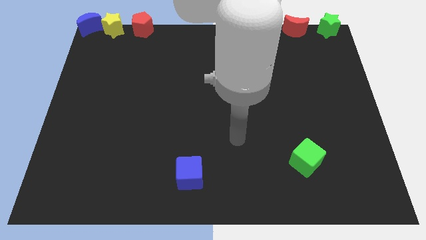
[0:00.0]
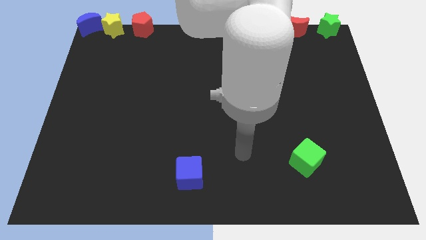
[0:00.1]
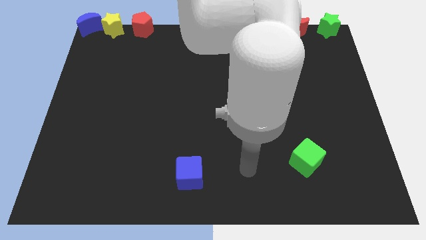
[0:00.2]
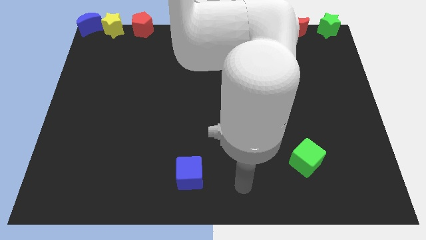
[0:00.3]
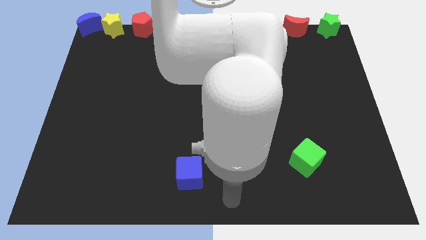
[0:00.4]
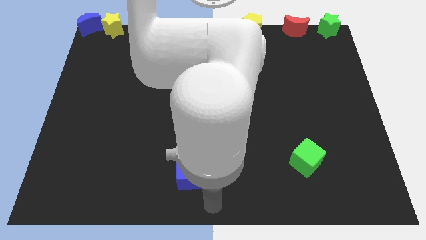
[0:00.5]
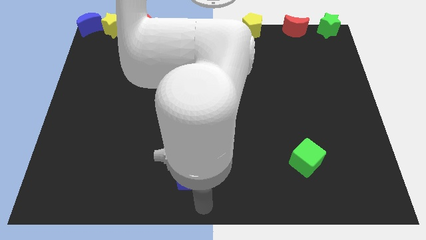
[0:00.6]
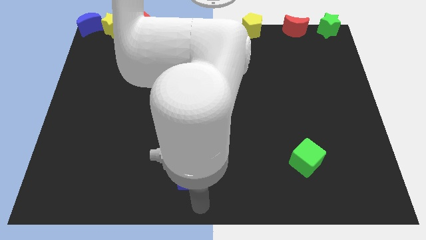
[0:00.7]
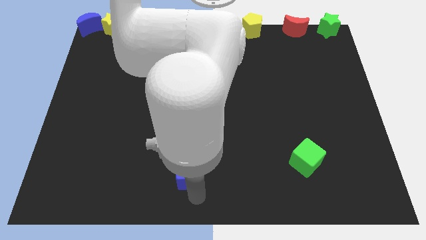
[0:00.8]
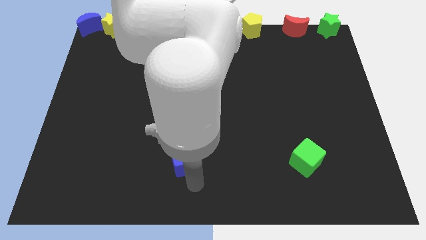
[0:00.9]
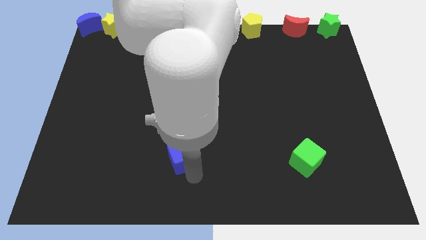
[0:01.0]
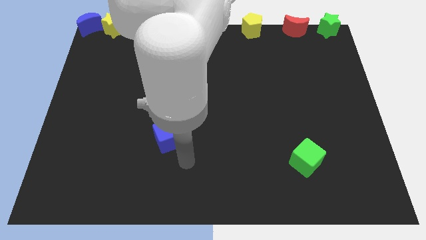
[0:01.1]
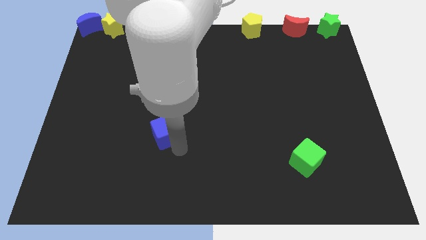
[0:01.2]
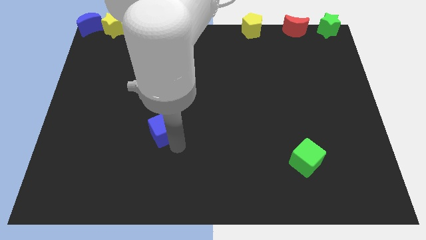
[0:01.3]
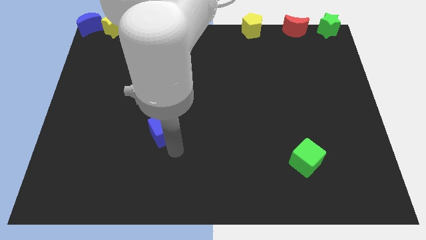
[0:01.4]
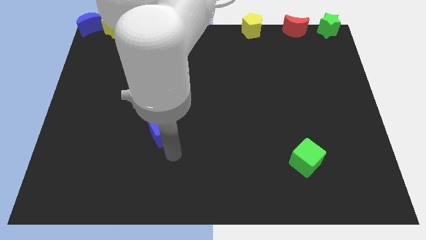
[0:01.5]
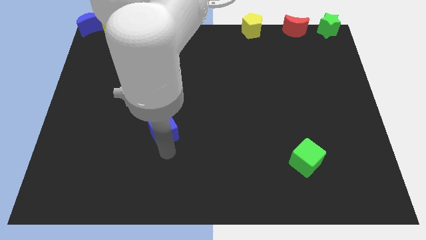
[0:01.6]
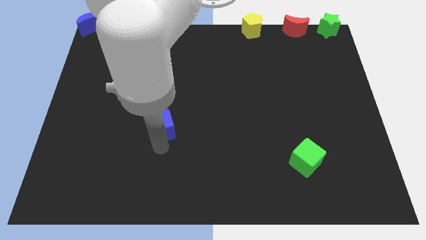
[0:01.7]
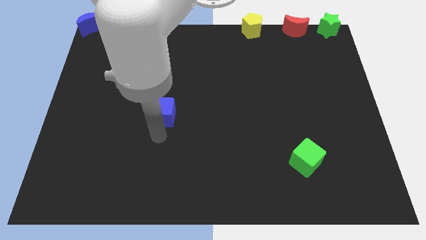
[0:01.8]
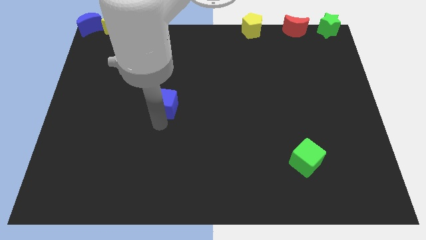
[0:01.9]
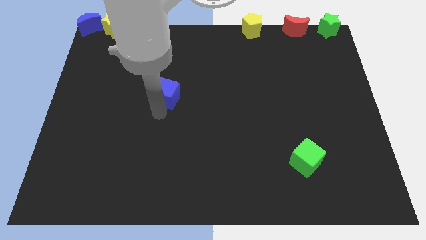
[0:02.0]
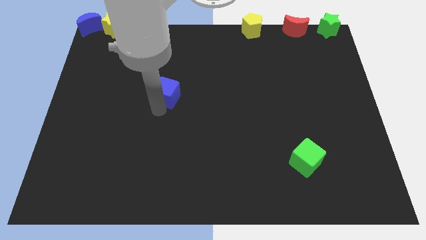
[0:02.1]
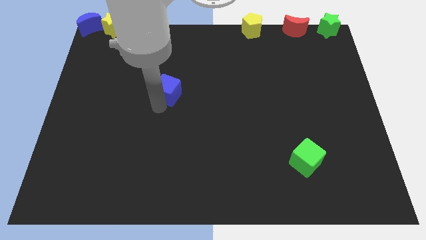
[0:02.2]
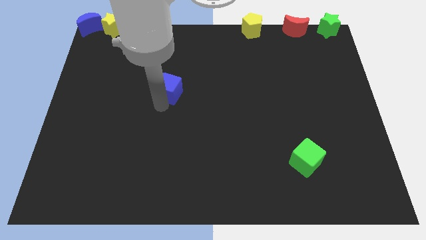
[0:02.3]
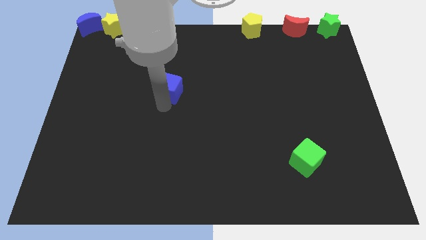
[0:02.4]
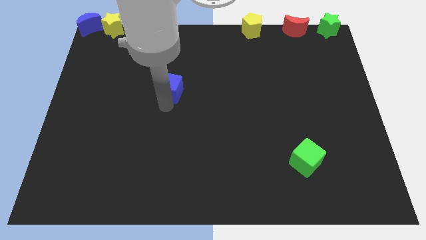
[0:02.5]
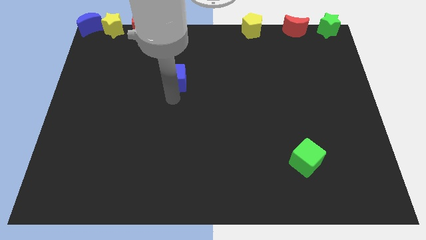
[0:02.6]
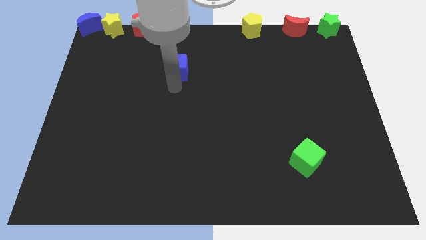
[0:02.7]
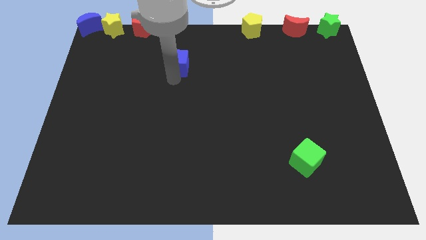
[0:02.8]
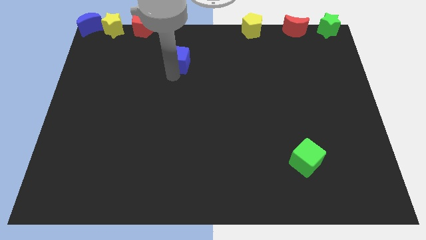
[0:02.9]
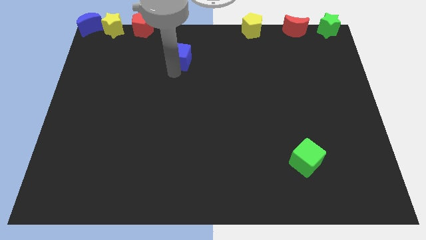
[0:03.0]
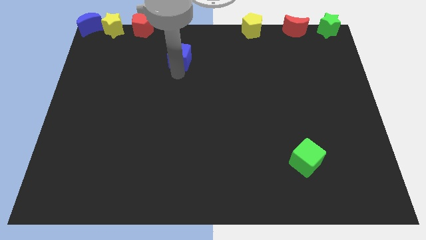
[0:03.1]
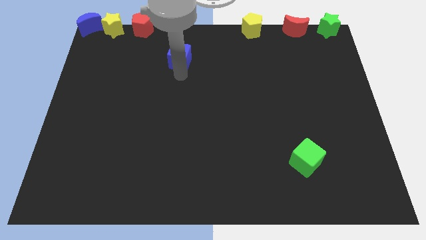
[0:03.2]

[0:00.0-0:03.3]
push the blue cube towards the top side

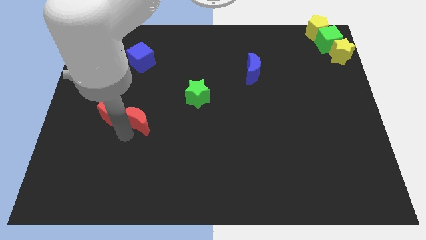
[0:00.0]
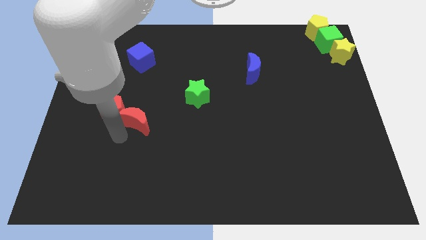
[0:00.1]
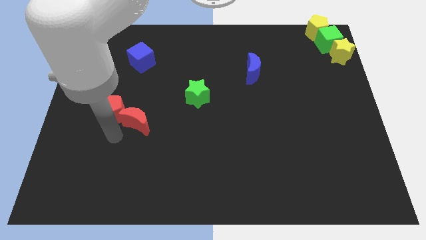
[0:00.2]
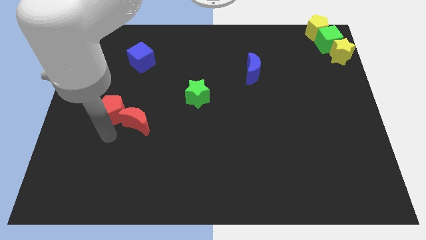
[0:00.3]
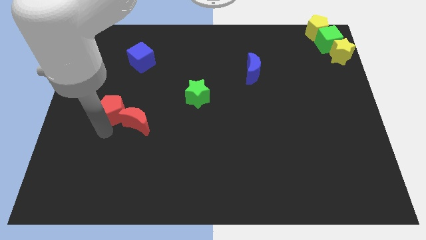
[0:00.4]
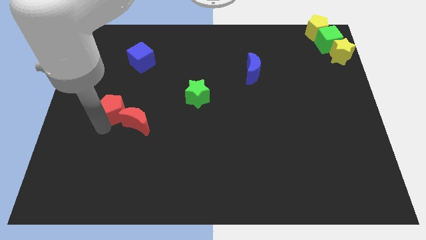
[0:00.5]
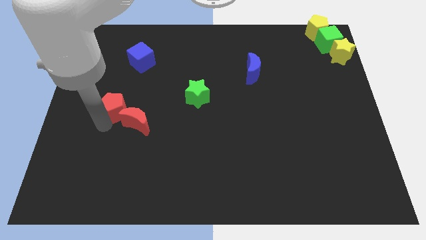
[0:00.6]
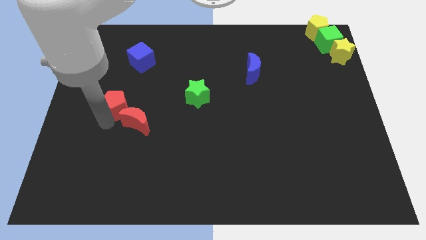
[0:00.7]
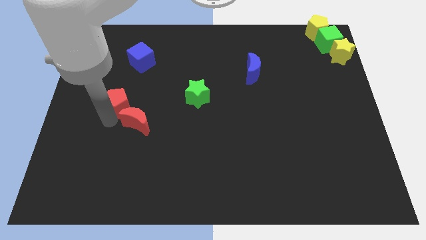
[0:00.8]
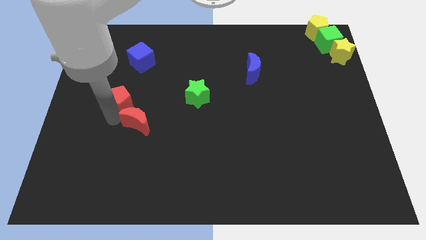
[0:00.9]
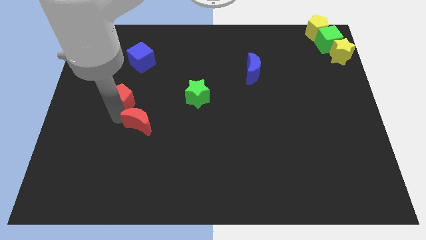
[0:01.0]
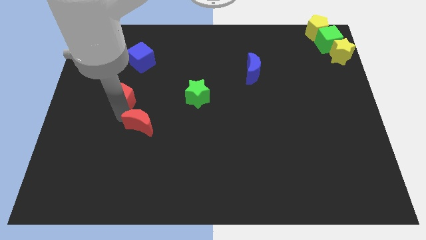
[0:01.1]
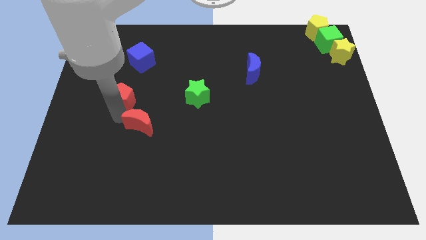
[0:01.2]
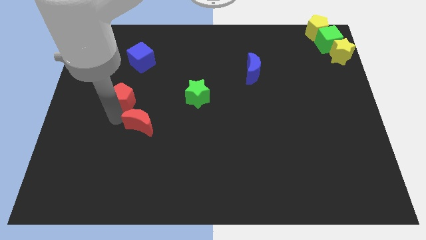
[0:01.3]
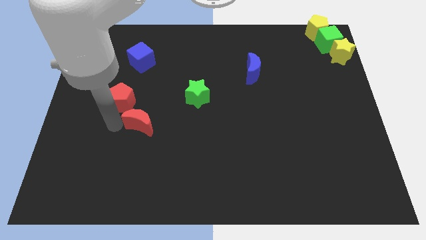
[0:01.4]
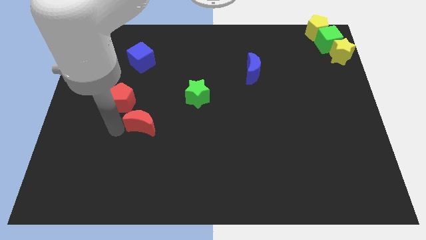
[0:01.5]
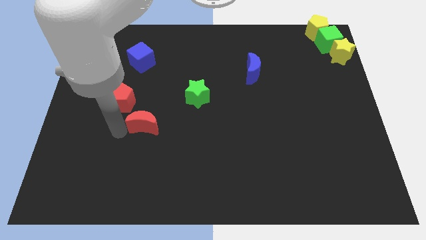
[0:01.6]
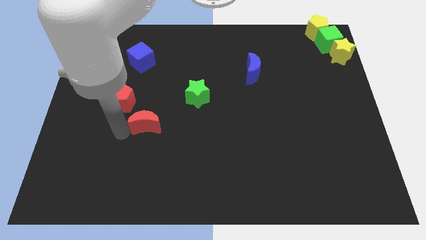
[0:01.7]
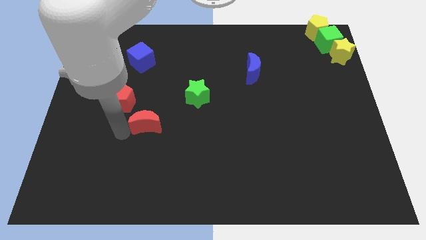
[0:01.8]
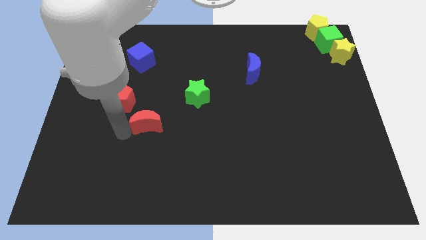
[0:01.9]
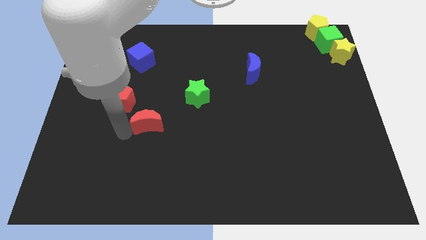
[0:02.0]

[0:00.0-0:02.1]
separate the red blocks

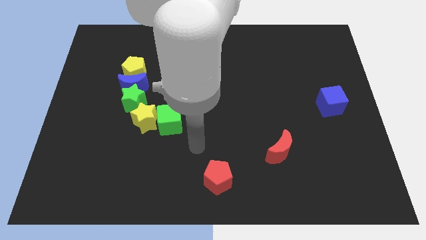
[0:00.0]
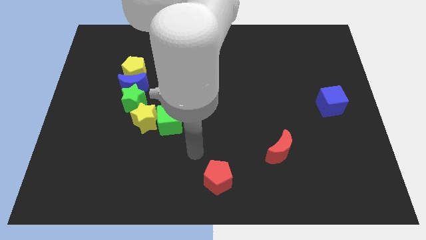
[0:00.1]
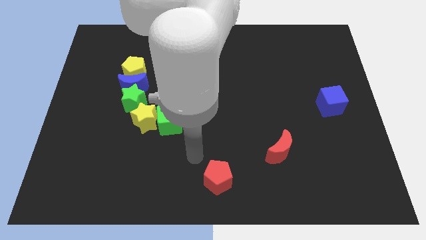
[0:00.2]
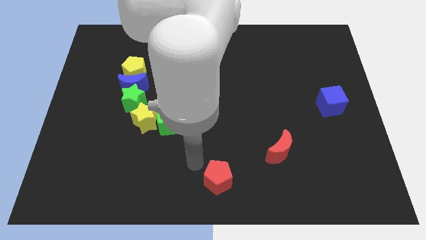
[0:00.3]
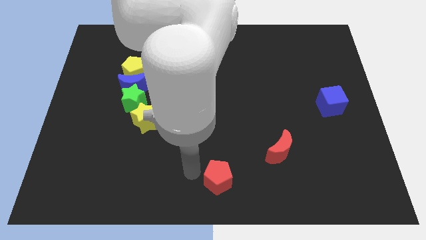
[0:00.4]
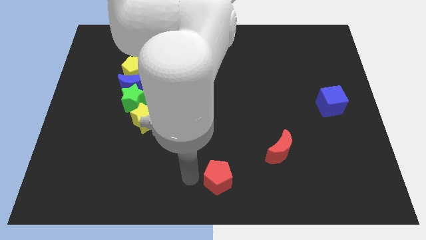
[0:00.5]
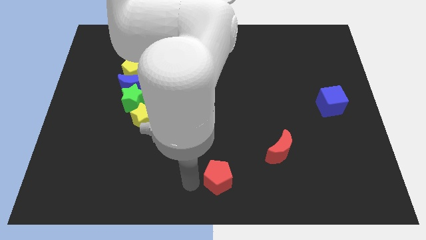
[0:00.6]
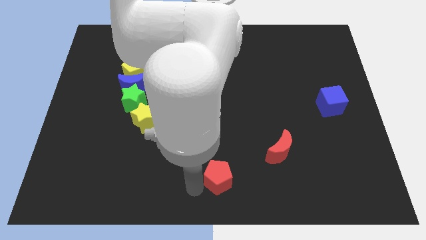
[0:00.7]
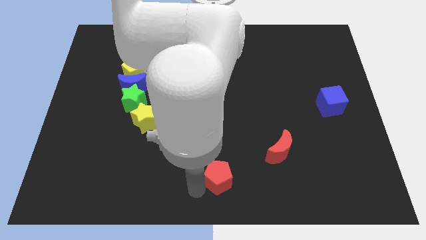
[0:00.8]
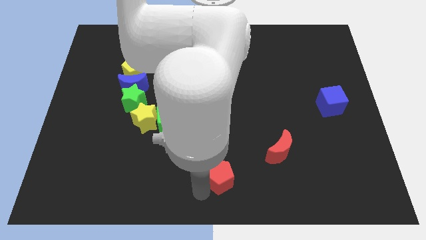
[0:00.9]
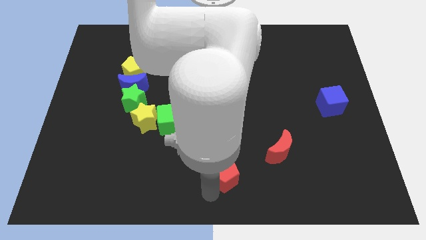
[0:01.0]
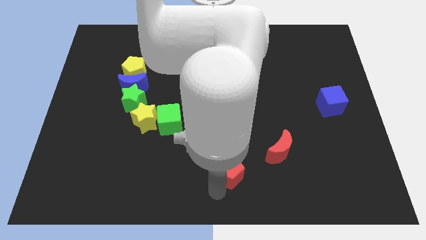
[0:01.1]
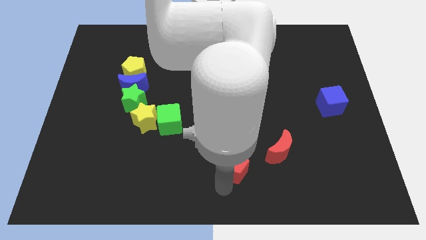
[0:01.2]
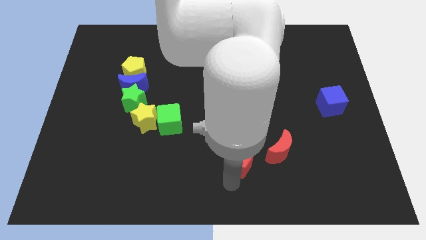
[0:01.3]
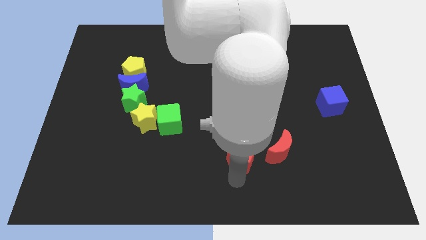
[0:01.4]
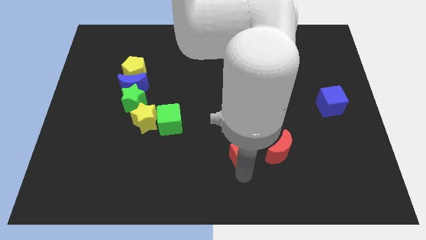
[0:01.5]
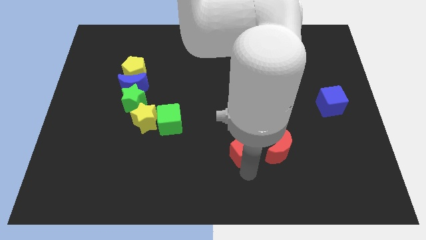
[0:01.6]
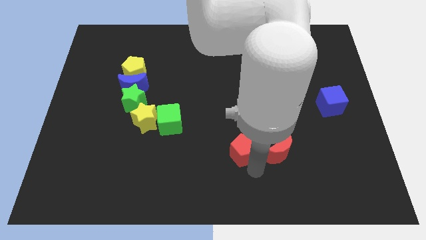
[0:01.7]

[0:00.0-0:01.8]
push the red pentagon near to the red crescent

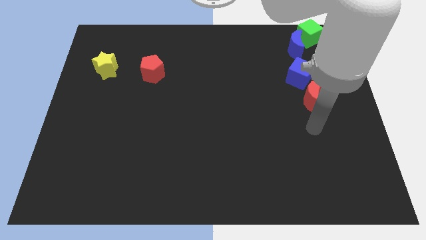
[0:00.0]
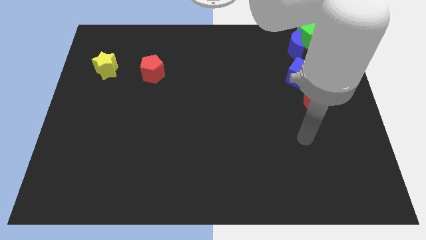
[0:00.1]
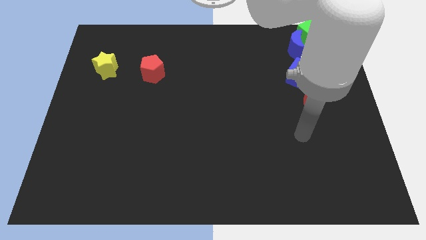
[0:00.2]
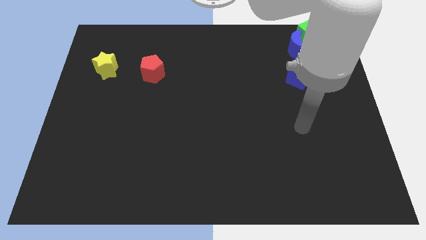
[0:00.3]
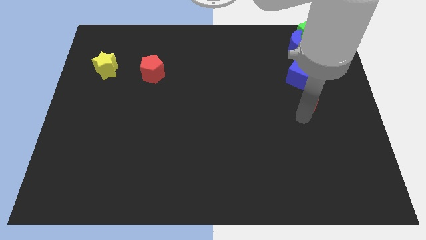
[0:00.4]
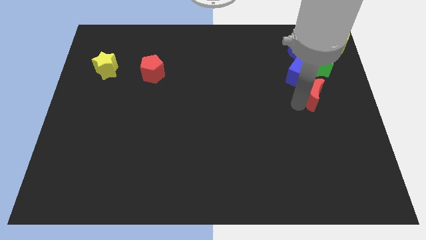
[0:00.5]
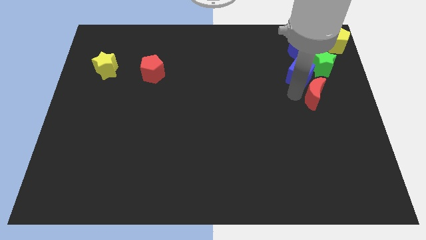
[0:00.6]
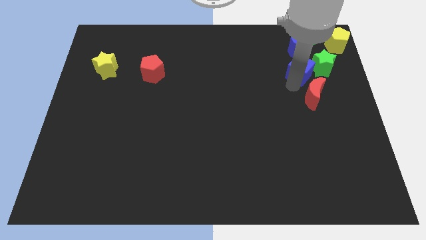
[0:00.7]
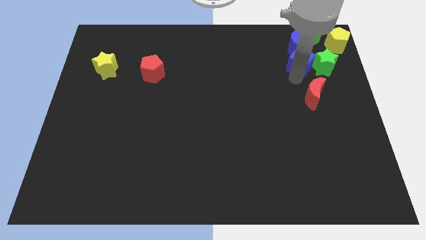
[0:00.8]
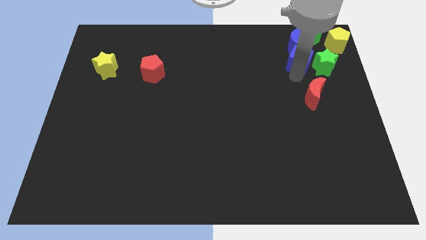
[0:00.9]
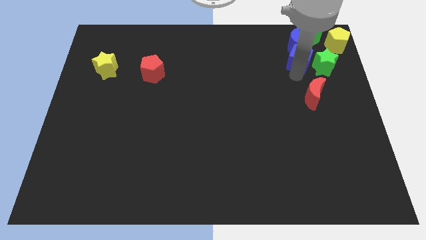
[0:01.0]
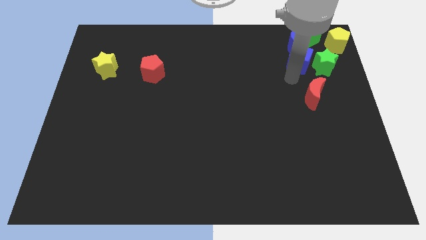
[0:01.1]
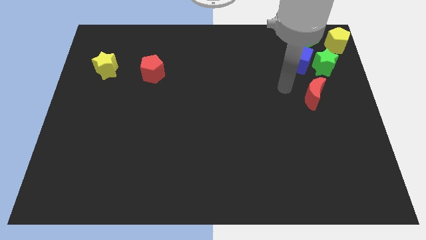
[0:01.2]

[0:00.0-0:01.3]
move the blue cube below the blue crescent

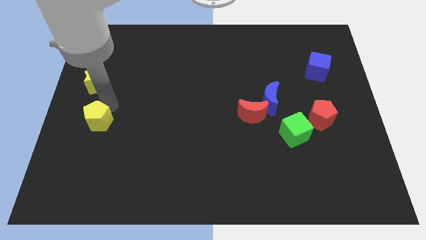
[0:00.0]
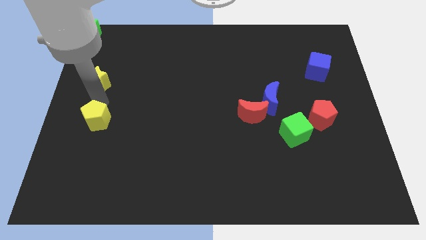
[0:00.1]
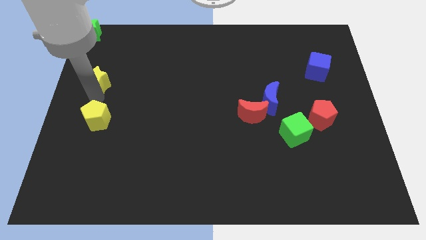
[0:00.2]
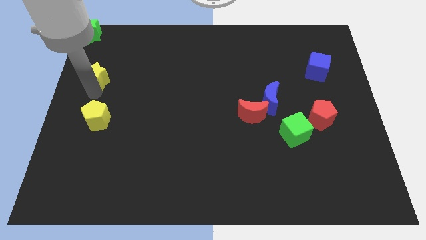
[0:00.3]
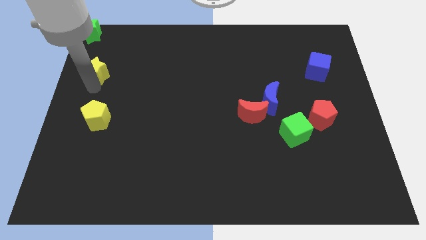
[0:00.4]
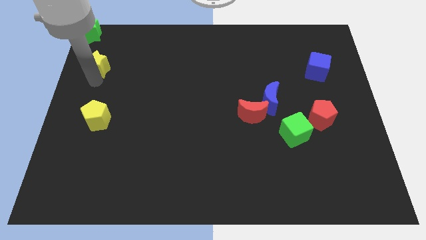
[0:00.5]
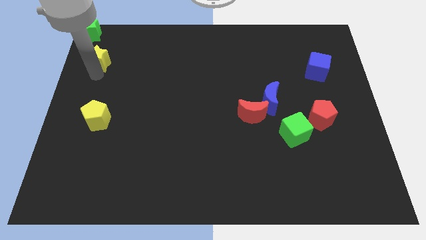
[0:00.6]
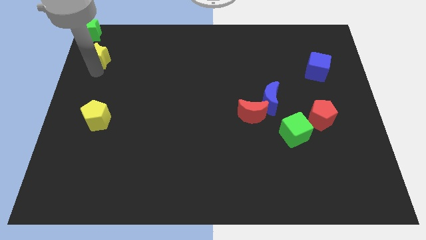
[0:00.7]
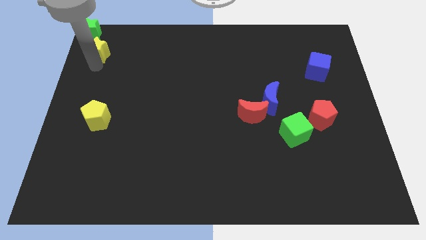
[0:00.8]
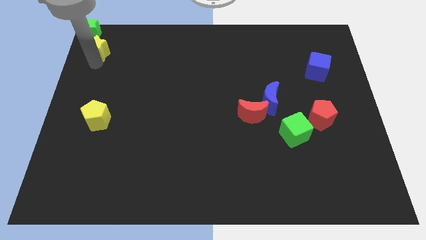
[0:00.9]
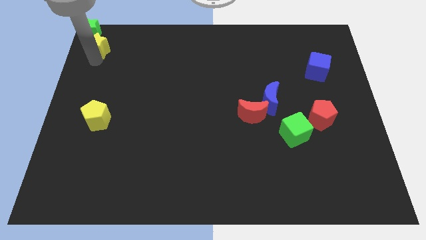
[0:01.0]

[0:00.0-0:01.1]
add yellow star into green star
